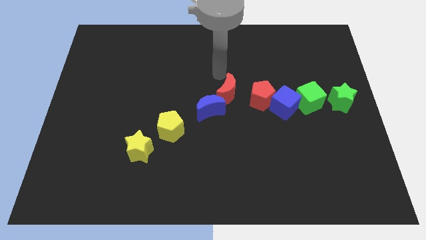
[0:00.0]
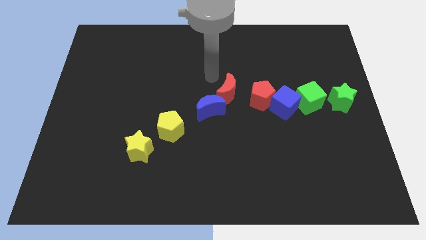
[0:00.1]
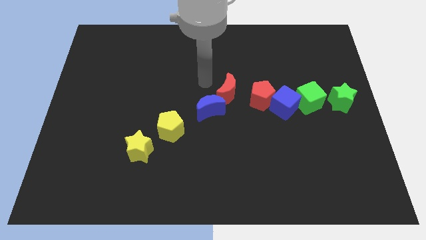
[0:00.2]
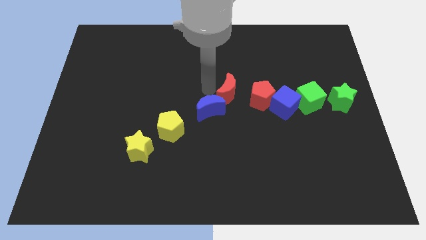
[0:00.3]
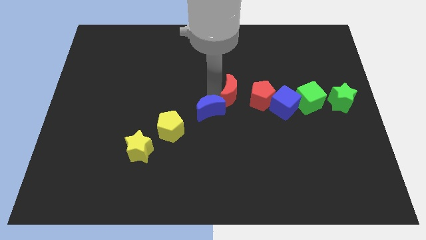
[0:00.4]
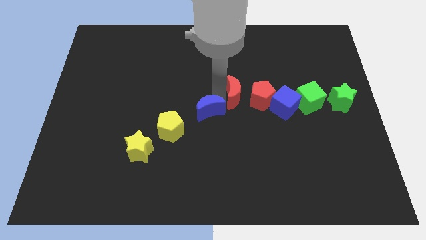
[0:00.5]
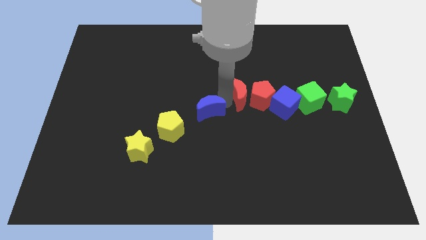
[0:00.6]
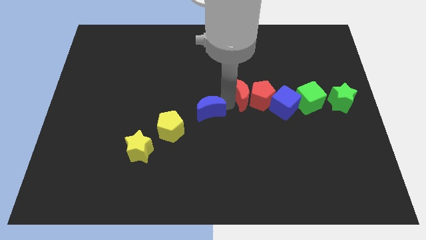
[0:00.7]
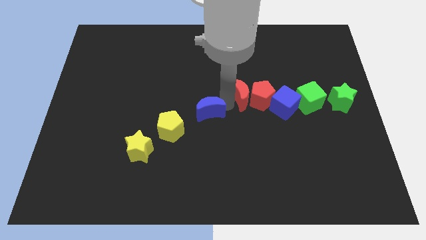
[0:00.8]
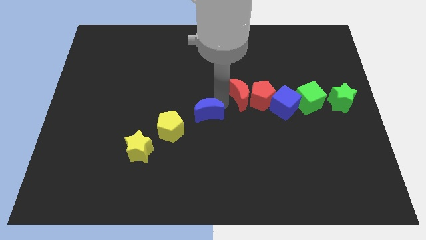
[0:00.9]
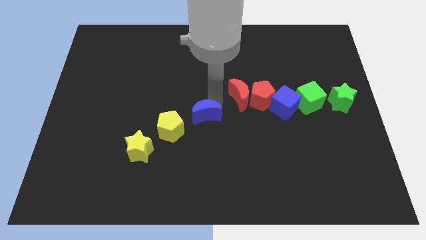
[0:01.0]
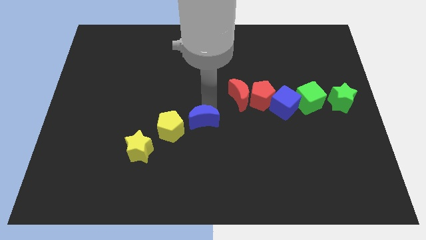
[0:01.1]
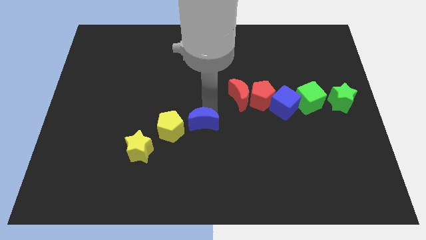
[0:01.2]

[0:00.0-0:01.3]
move the blue moon away from the red moon

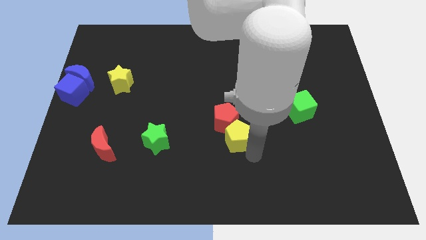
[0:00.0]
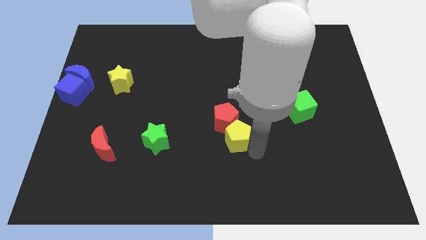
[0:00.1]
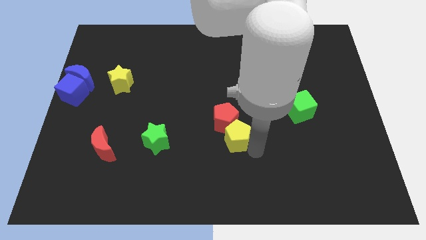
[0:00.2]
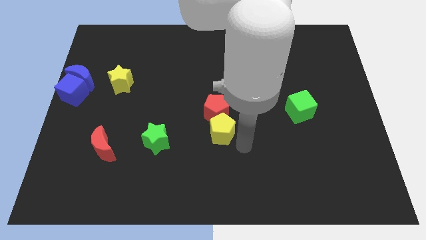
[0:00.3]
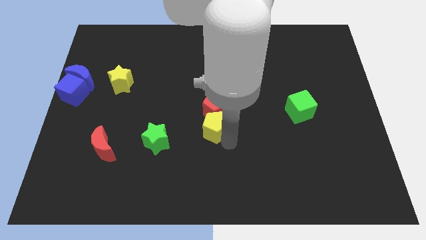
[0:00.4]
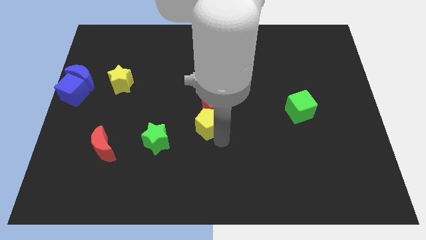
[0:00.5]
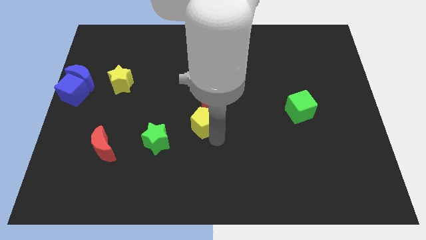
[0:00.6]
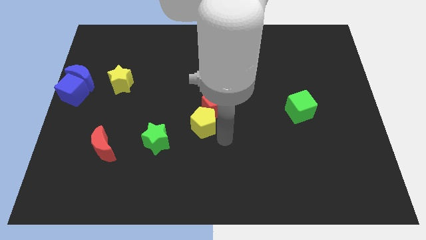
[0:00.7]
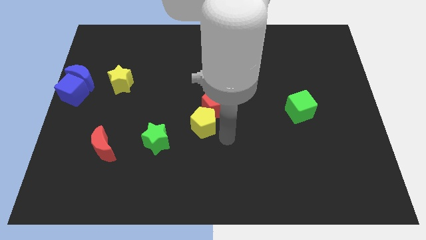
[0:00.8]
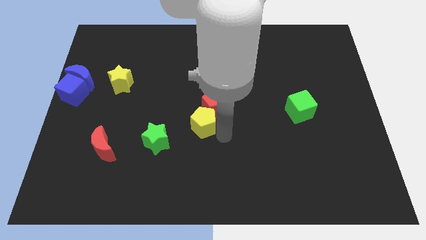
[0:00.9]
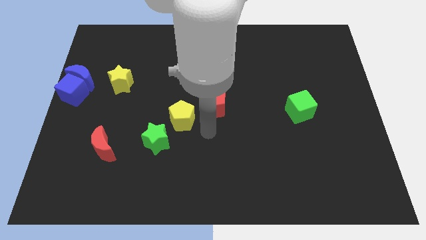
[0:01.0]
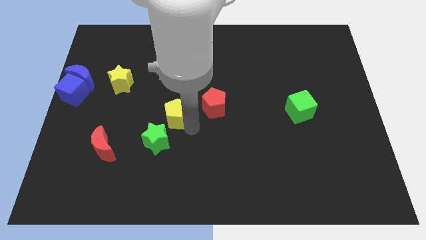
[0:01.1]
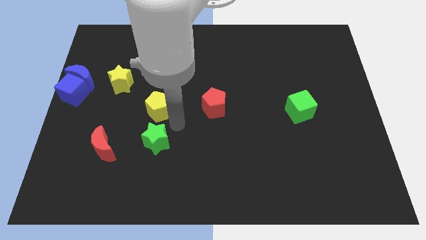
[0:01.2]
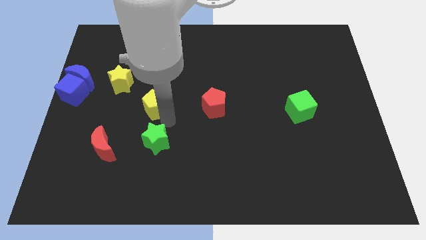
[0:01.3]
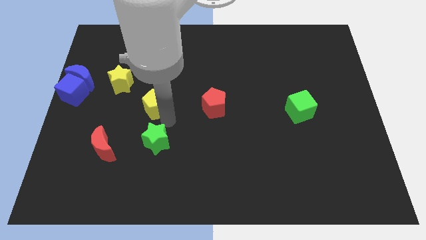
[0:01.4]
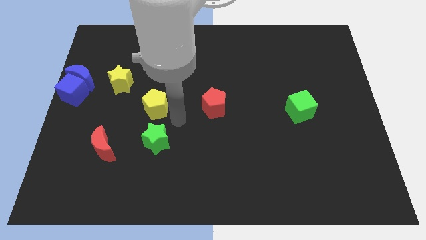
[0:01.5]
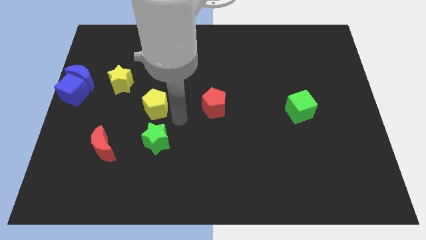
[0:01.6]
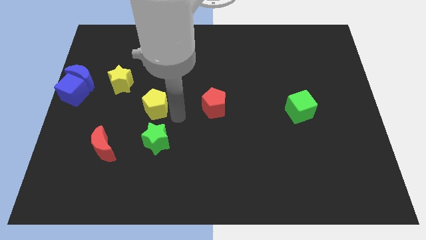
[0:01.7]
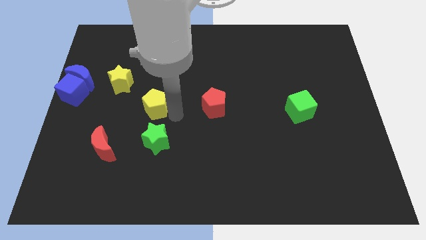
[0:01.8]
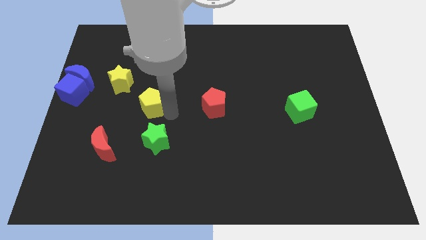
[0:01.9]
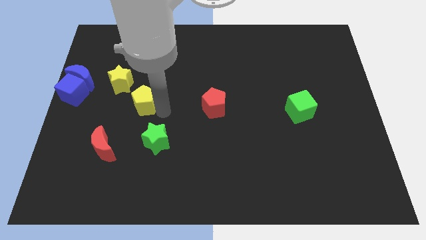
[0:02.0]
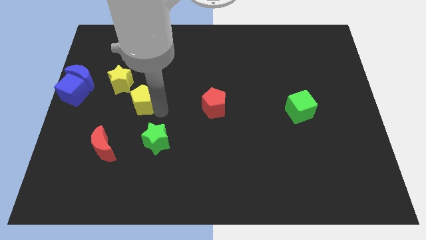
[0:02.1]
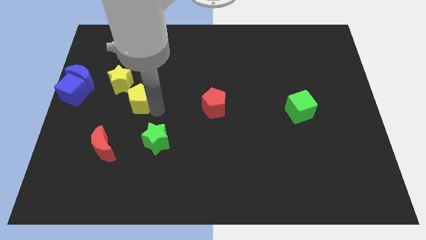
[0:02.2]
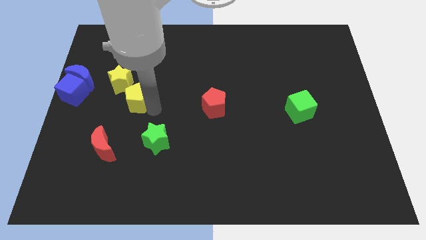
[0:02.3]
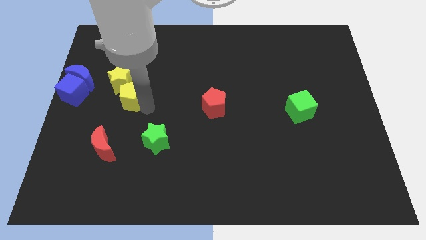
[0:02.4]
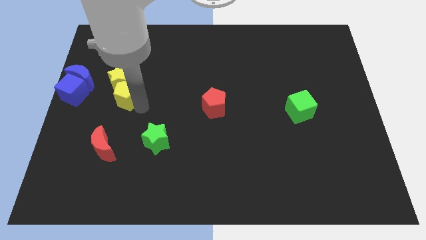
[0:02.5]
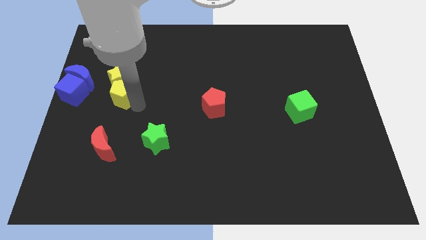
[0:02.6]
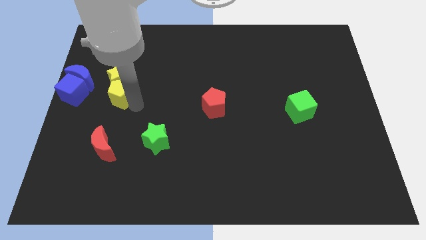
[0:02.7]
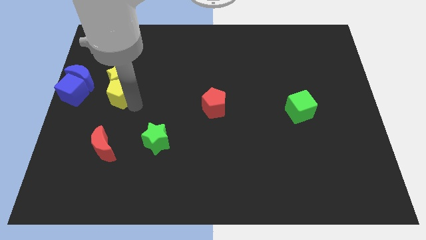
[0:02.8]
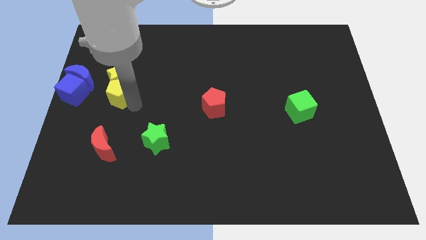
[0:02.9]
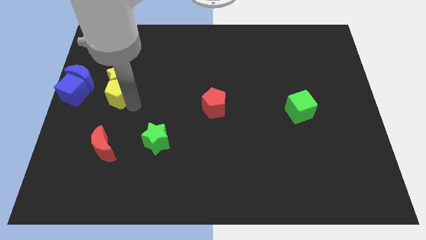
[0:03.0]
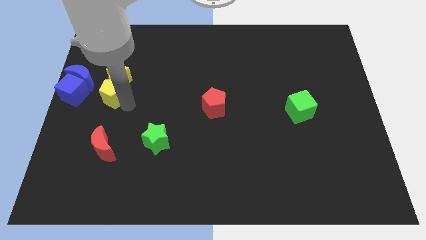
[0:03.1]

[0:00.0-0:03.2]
move the yellow pentagon into yellow star

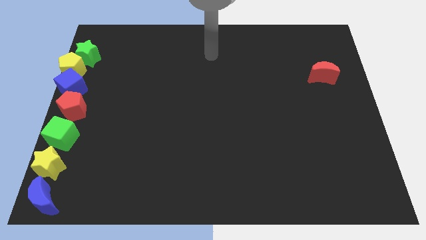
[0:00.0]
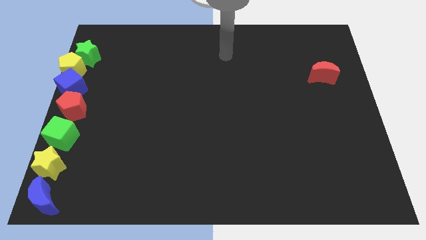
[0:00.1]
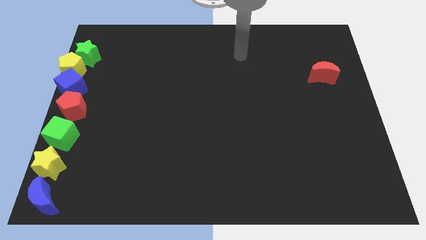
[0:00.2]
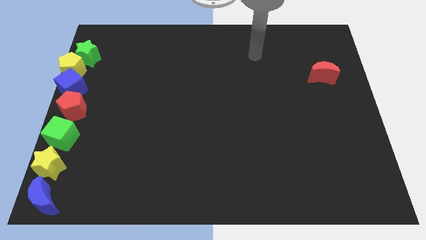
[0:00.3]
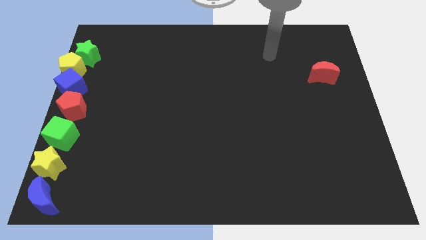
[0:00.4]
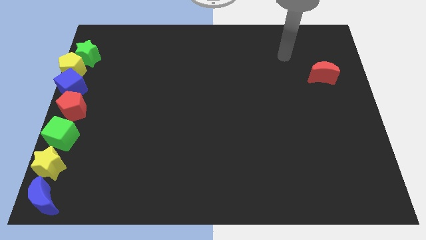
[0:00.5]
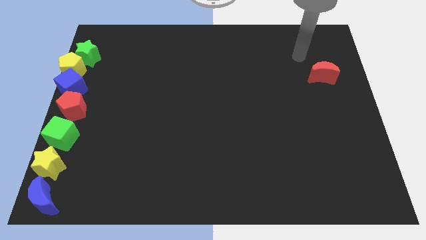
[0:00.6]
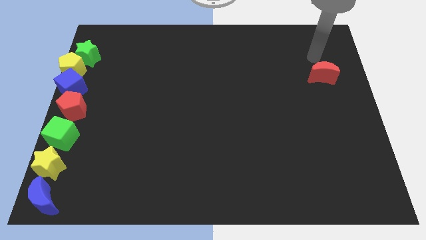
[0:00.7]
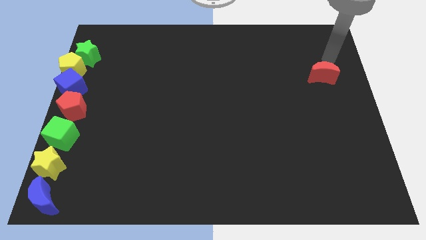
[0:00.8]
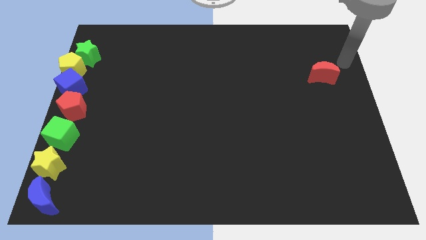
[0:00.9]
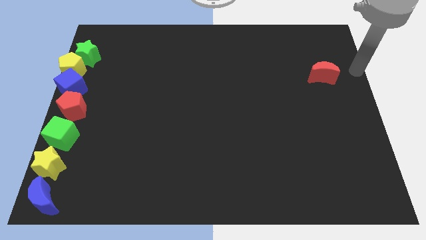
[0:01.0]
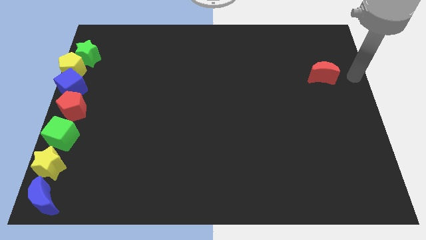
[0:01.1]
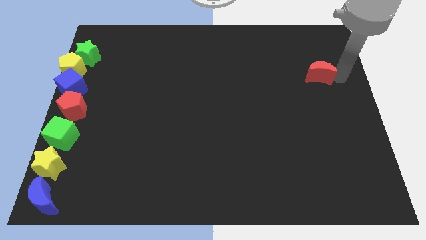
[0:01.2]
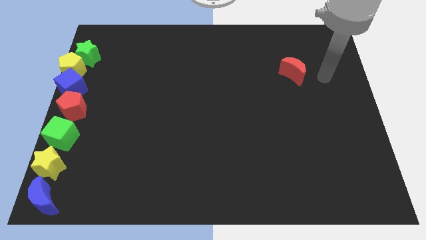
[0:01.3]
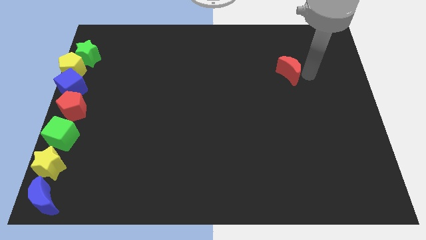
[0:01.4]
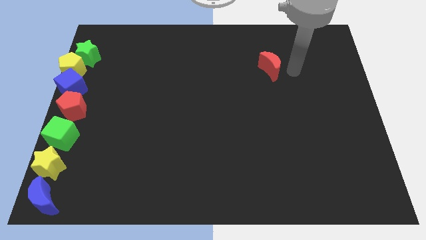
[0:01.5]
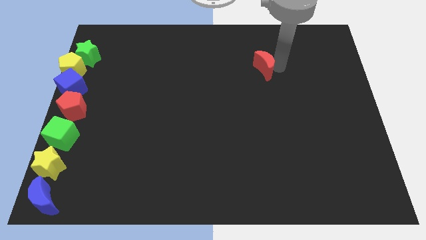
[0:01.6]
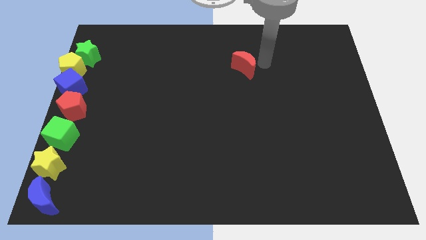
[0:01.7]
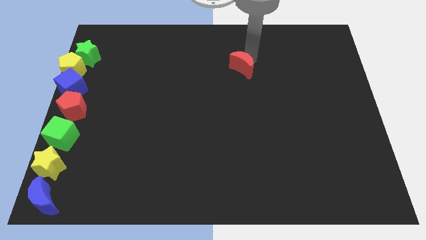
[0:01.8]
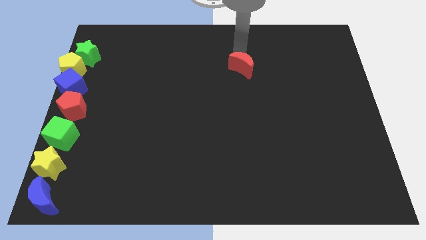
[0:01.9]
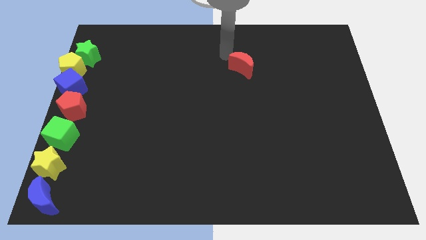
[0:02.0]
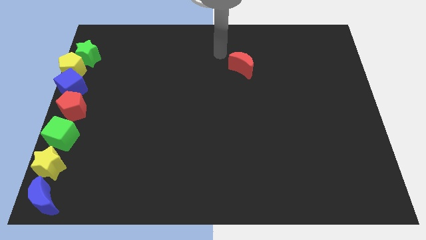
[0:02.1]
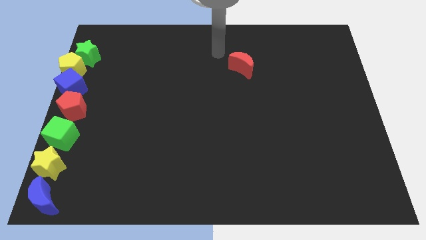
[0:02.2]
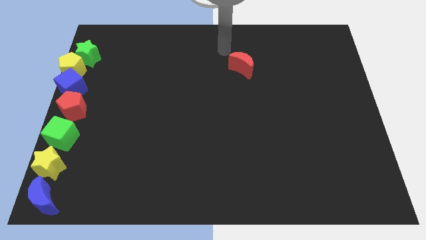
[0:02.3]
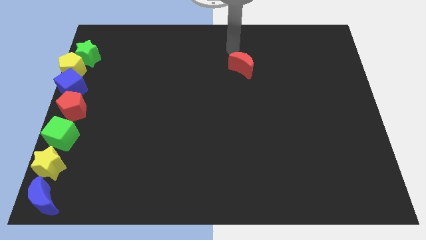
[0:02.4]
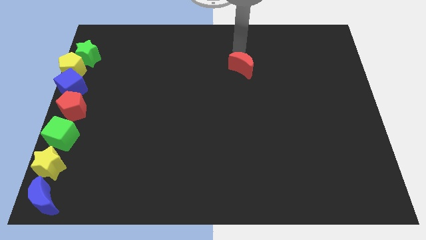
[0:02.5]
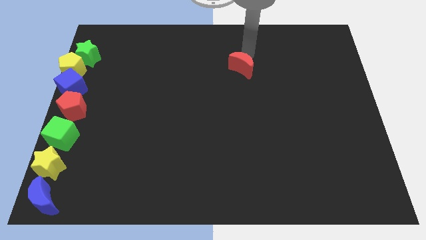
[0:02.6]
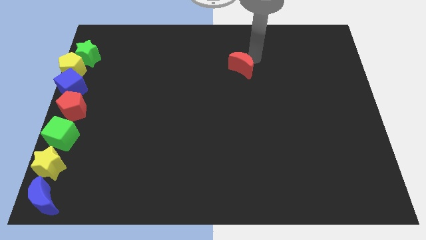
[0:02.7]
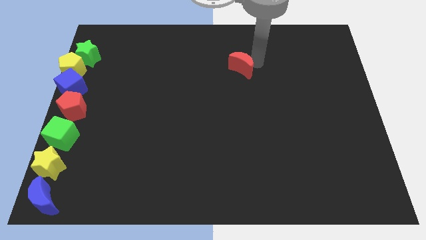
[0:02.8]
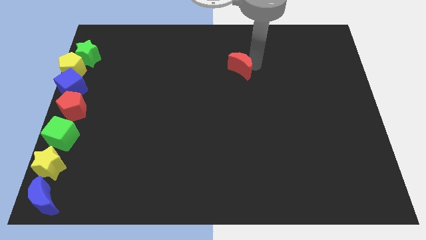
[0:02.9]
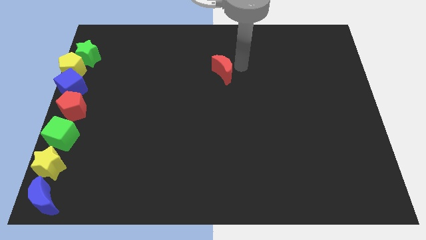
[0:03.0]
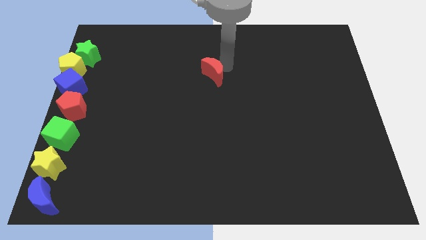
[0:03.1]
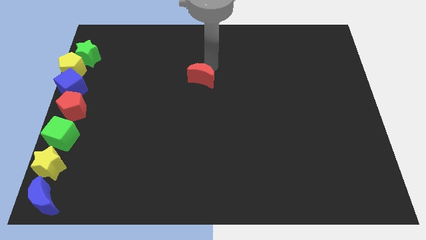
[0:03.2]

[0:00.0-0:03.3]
move the red moon towards the center of the board

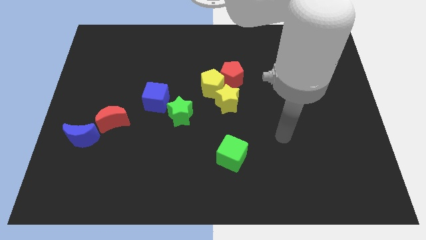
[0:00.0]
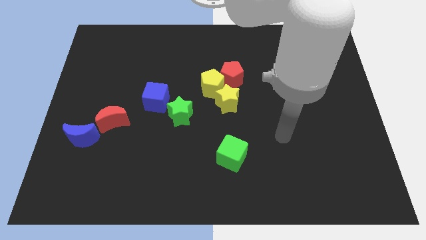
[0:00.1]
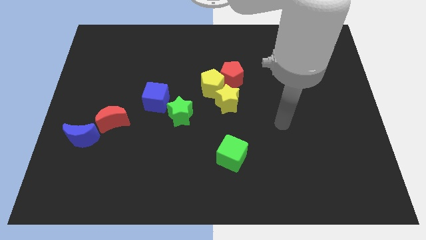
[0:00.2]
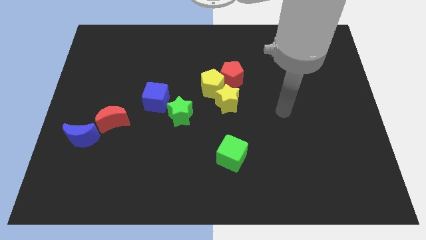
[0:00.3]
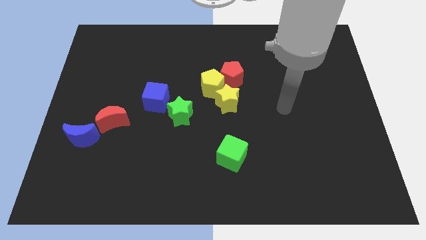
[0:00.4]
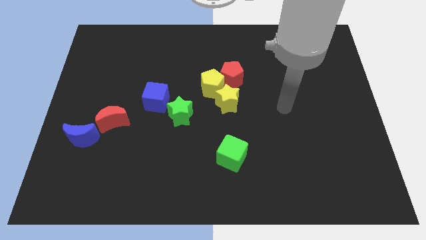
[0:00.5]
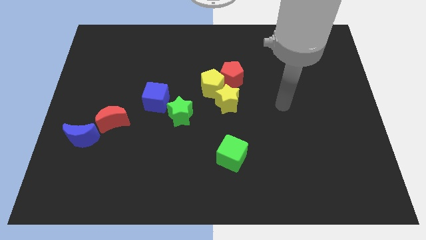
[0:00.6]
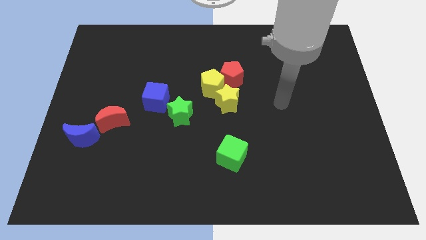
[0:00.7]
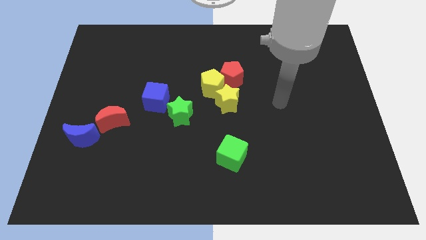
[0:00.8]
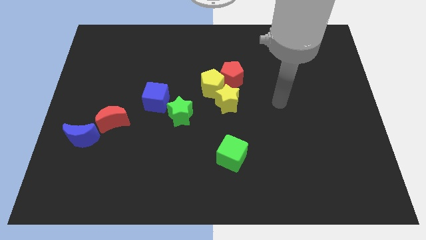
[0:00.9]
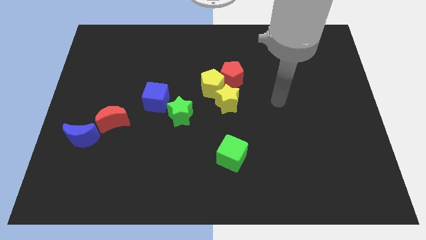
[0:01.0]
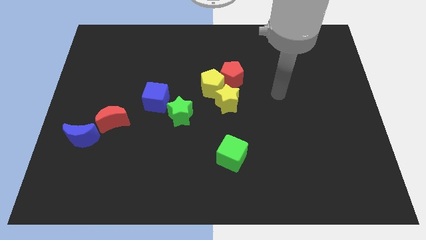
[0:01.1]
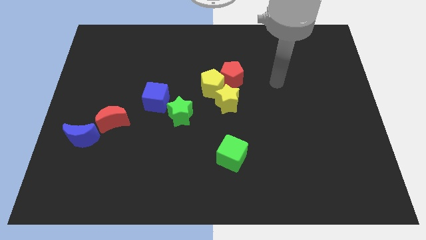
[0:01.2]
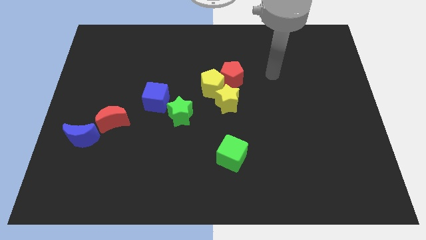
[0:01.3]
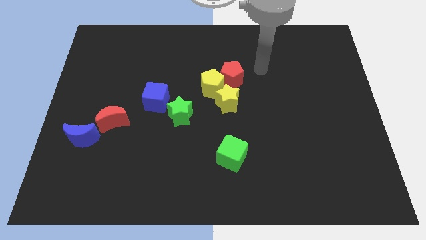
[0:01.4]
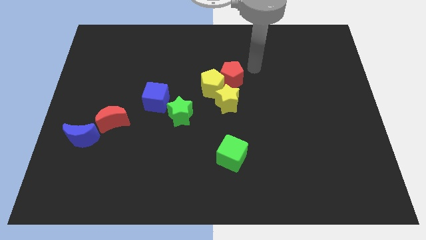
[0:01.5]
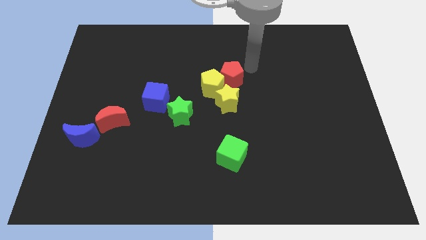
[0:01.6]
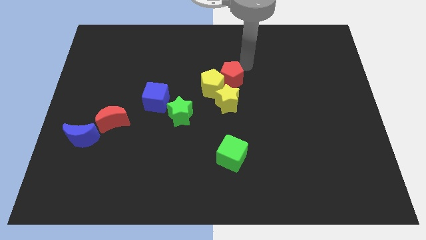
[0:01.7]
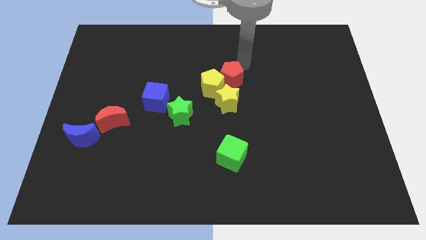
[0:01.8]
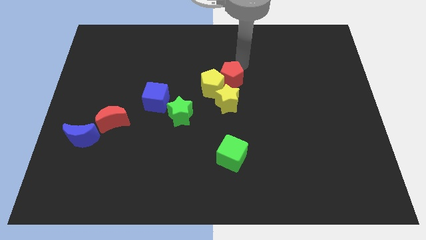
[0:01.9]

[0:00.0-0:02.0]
touch the red pentagon with your arm
